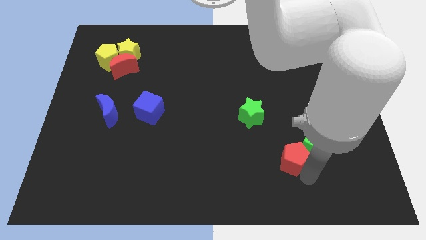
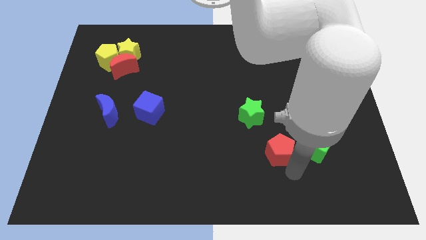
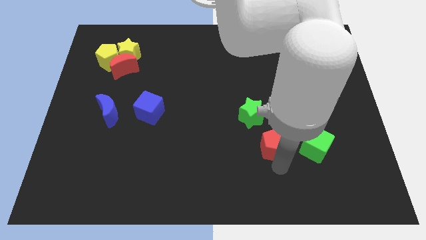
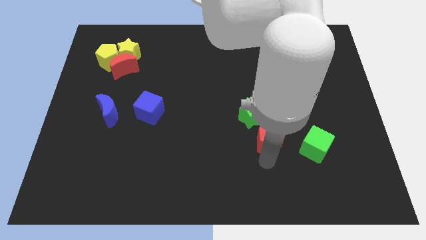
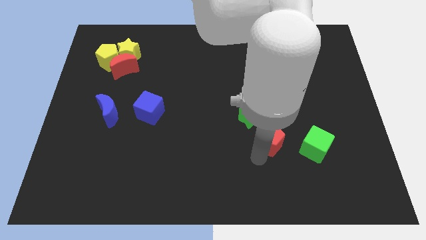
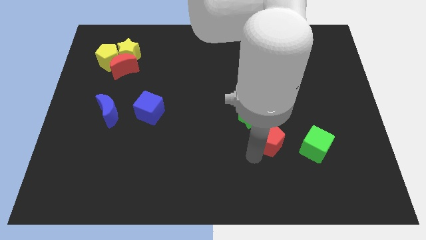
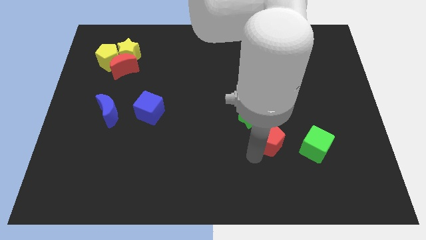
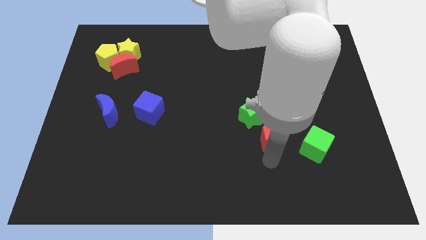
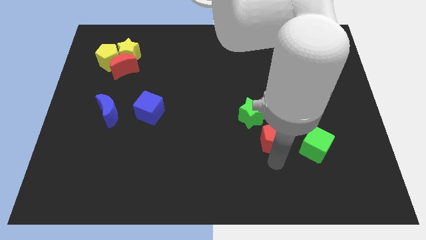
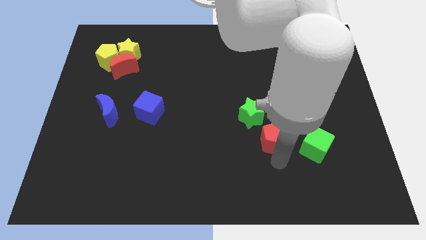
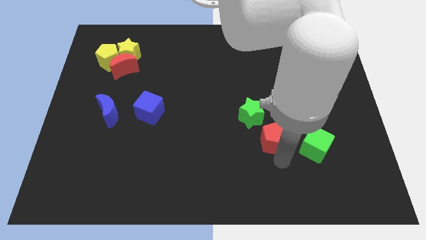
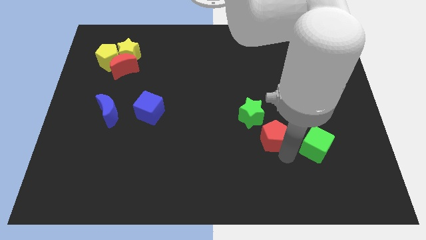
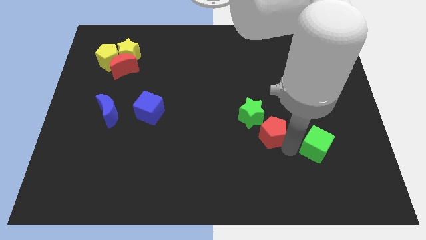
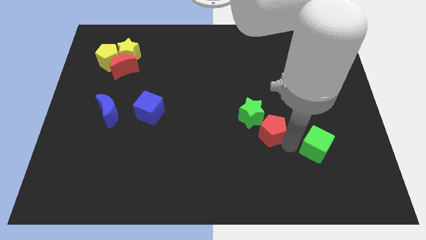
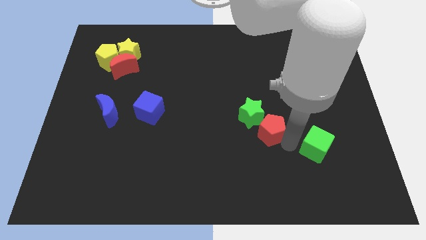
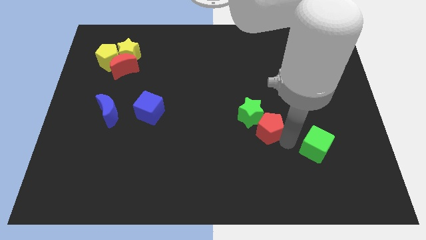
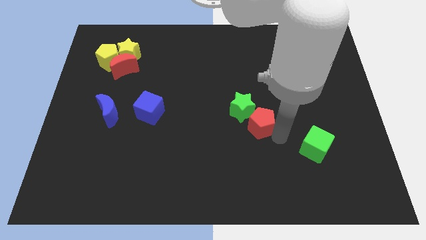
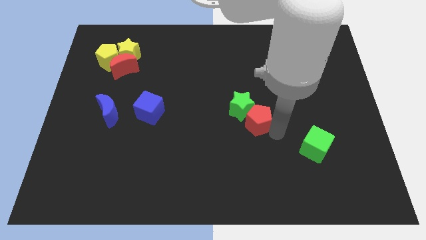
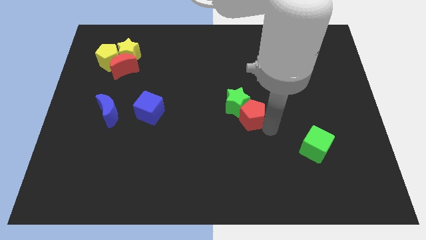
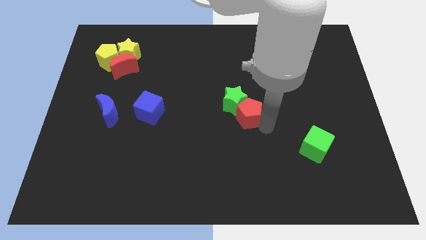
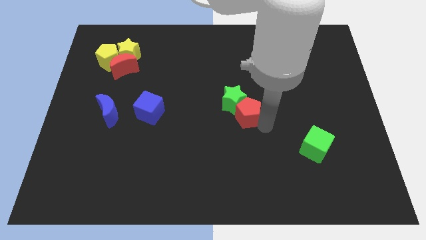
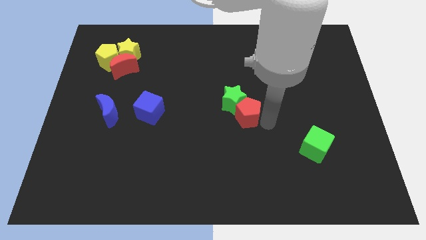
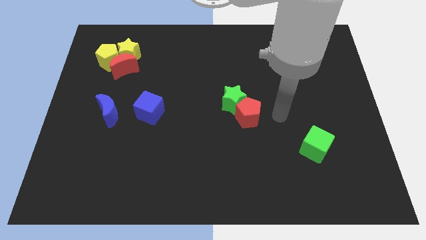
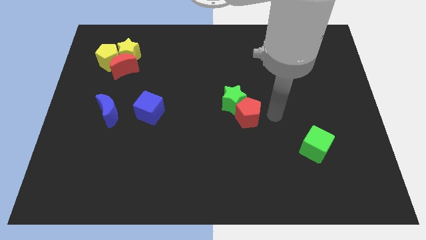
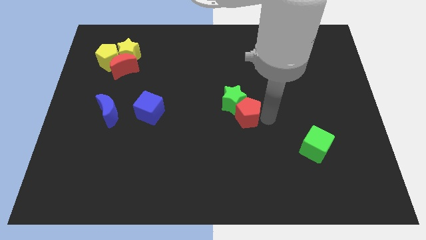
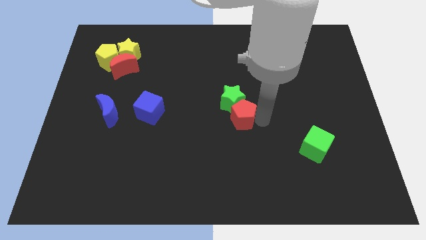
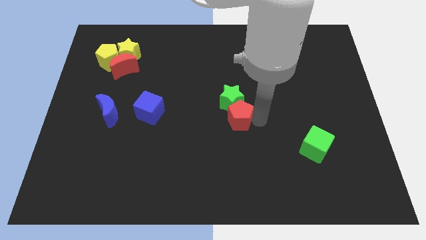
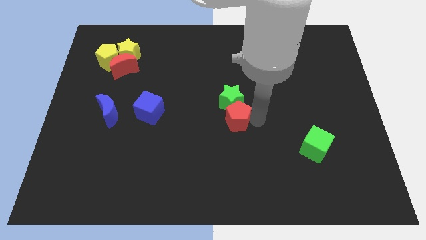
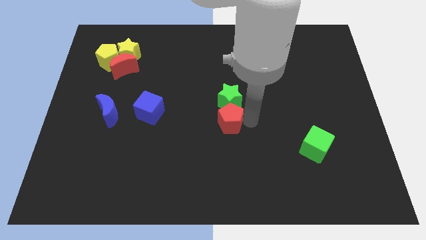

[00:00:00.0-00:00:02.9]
push red pentagon upwards

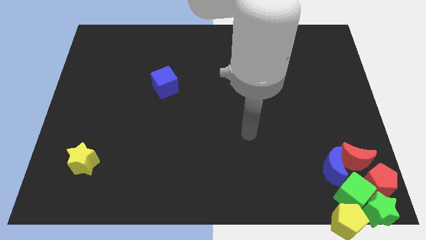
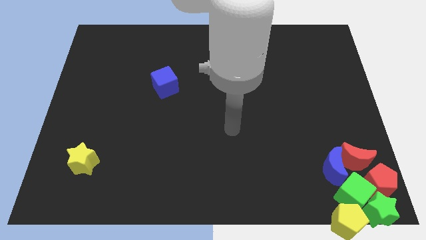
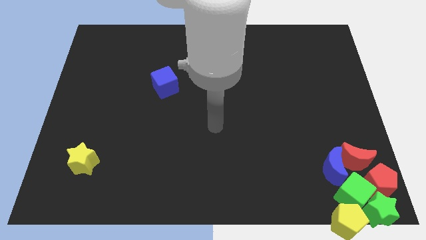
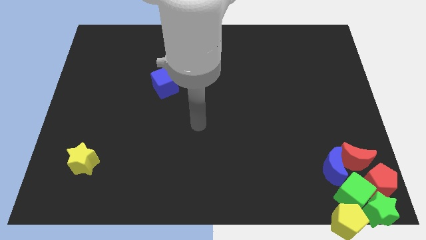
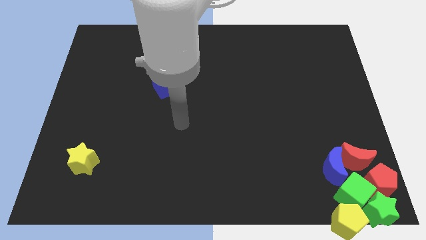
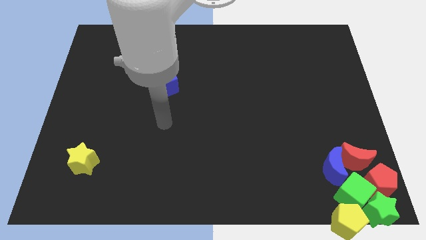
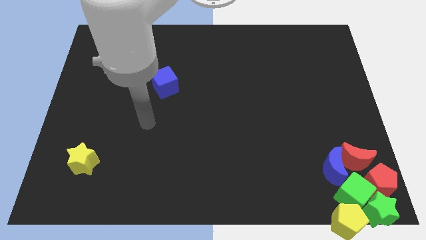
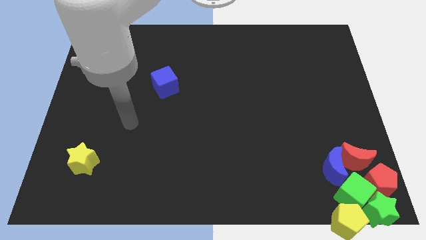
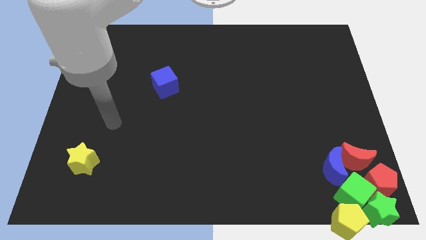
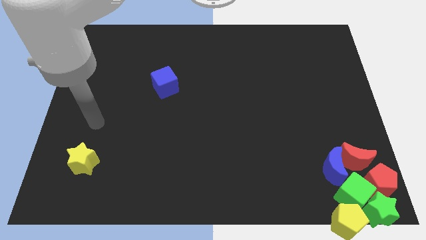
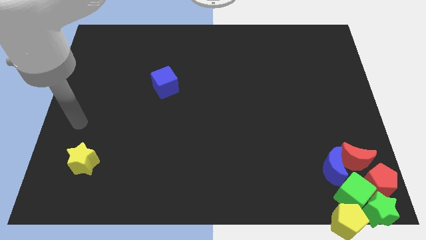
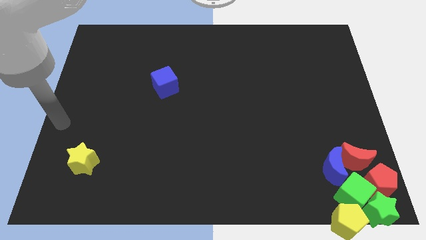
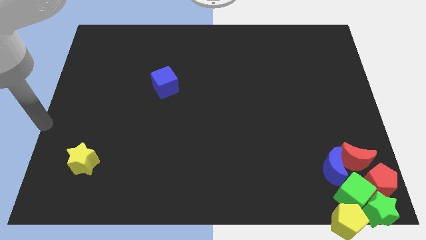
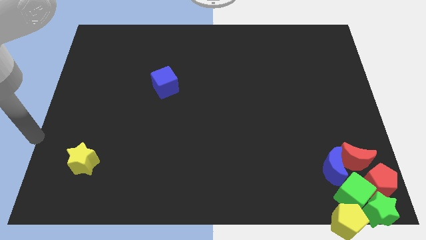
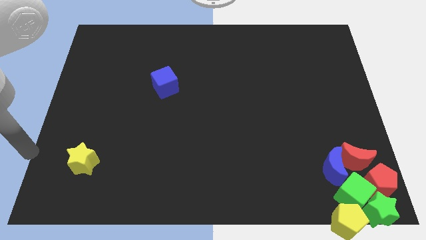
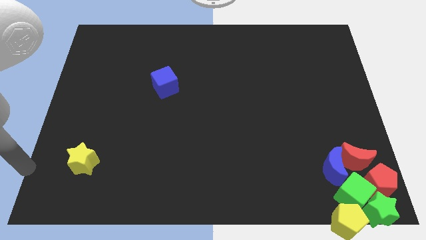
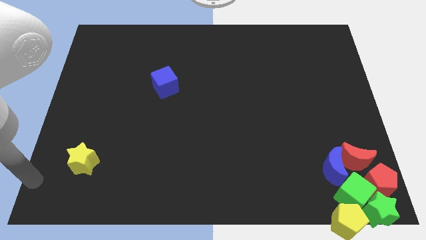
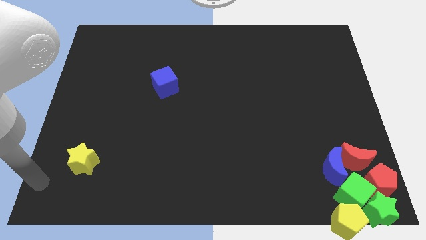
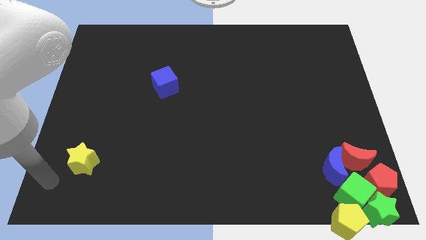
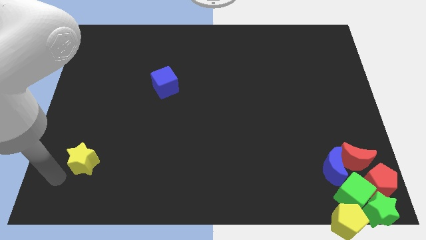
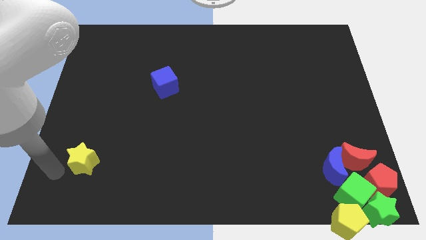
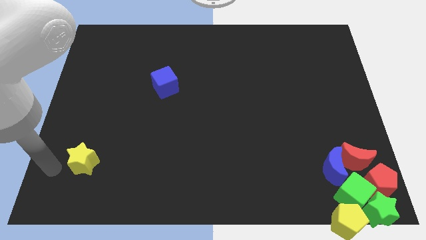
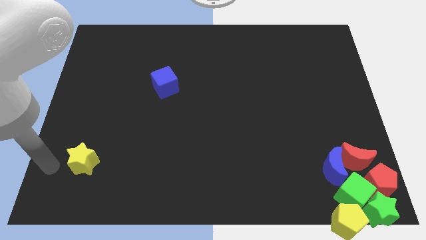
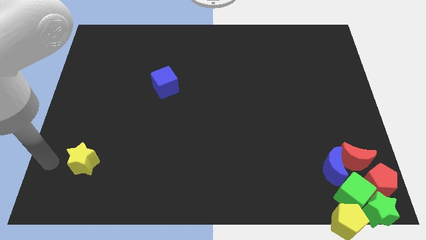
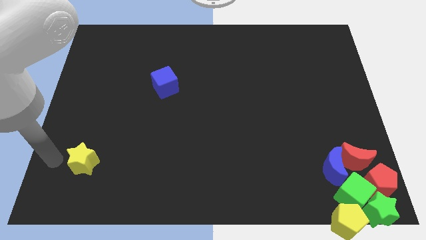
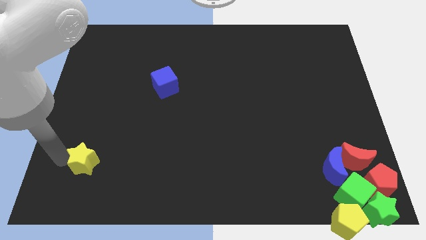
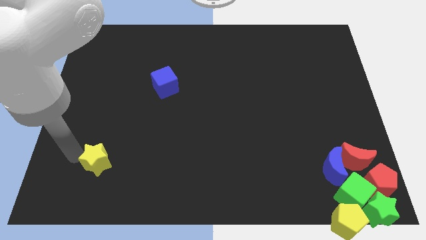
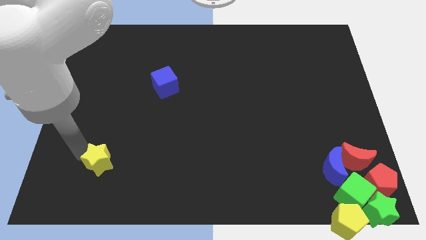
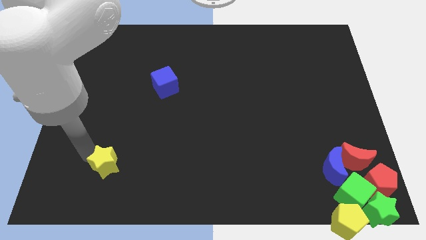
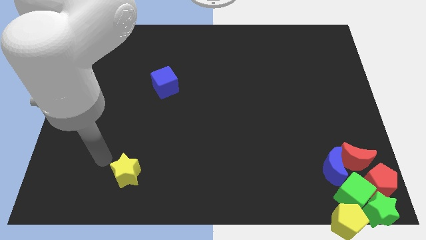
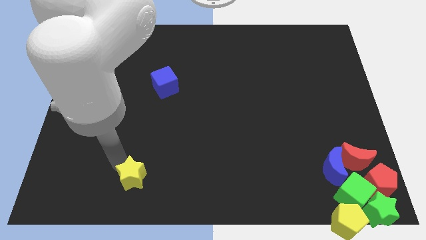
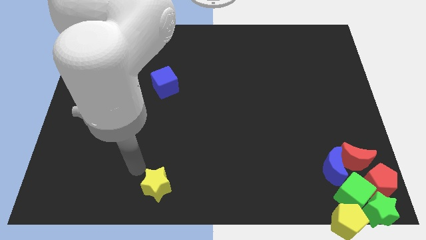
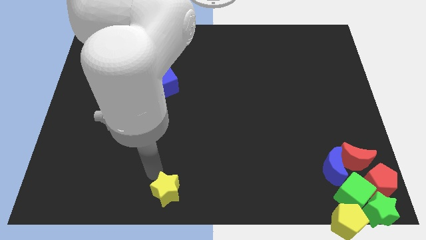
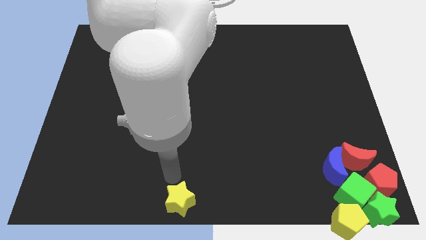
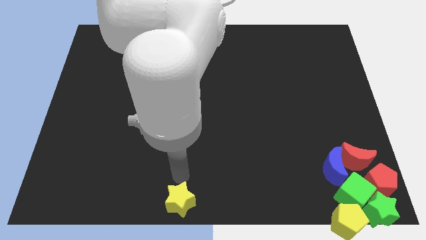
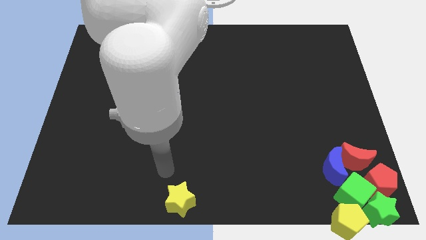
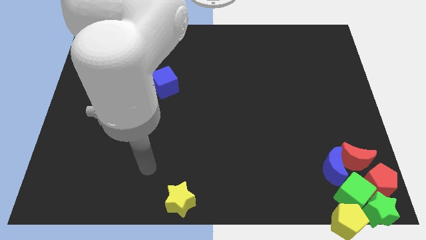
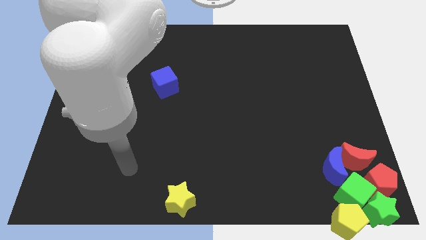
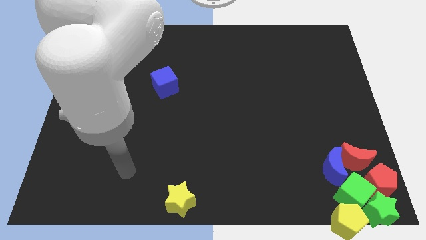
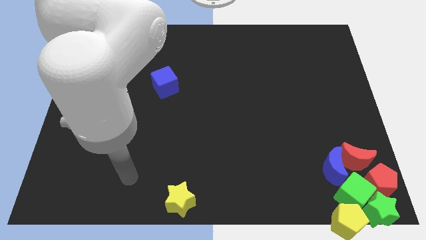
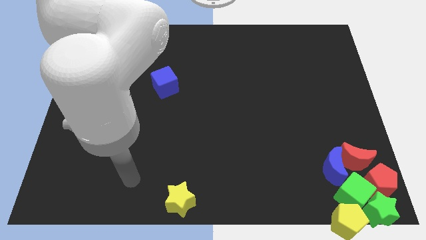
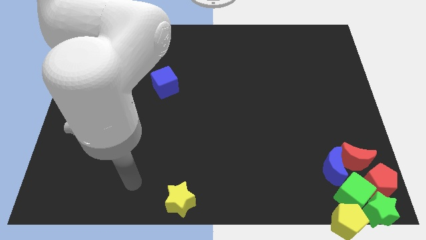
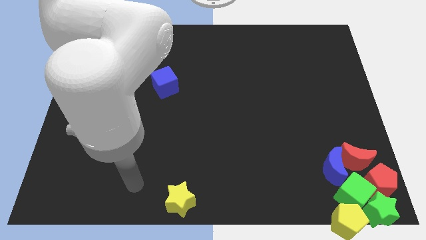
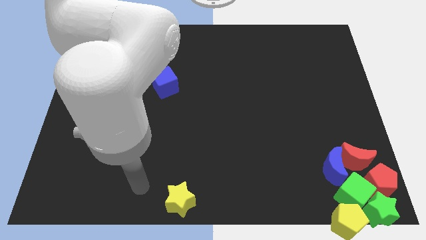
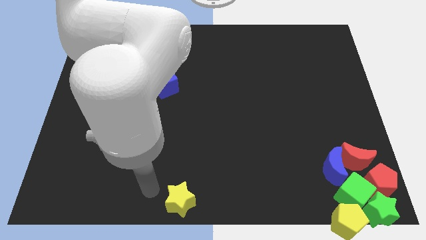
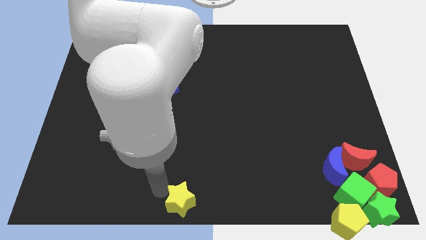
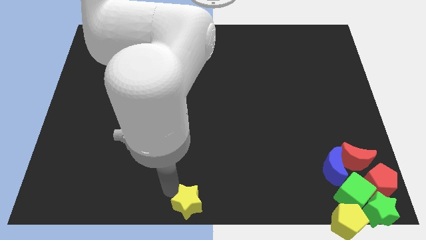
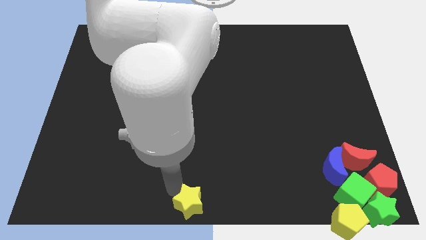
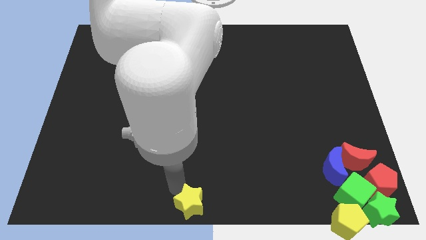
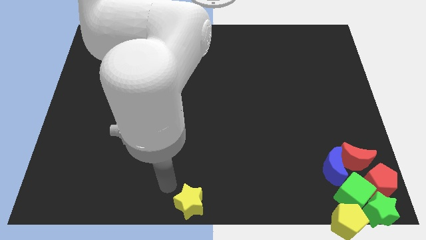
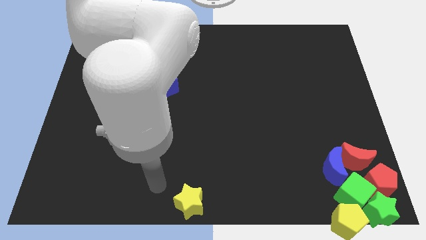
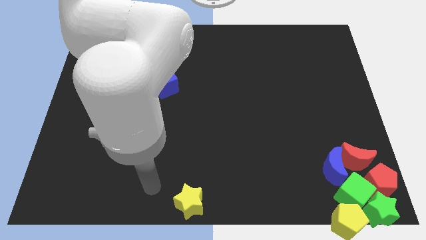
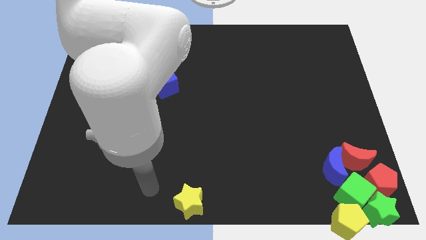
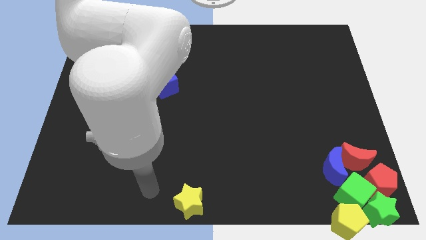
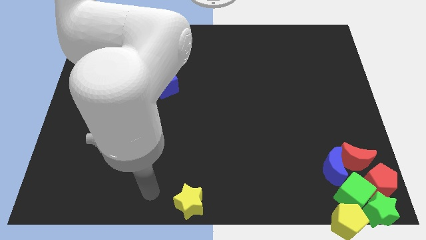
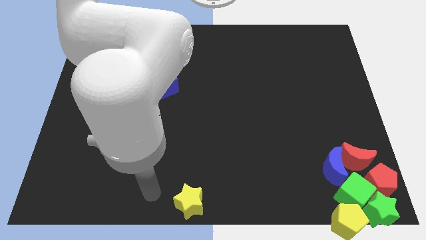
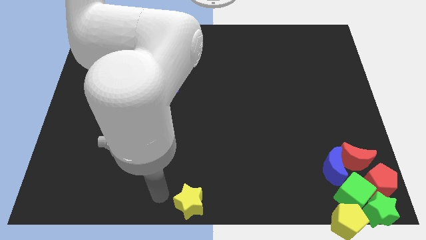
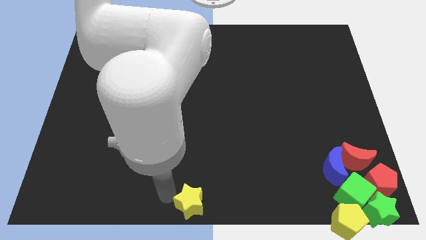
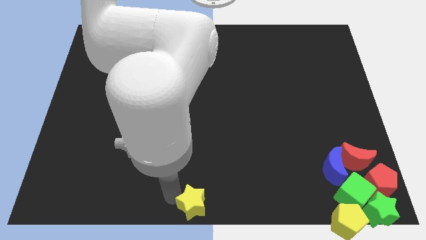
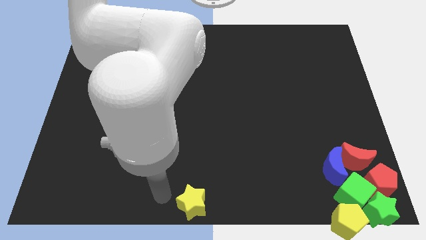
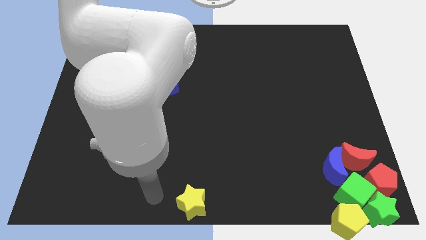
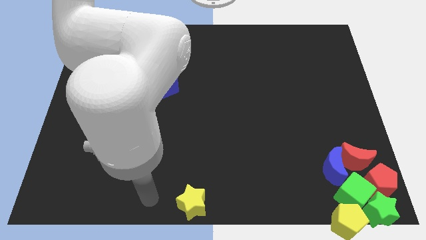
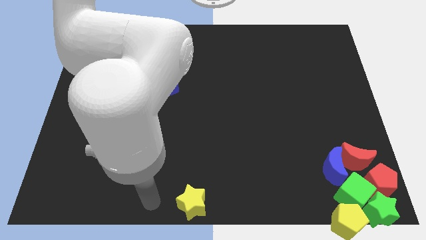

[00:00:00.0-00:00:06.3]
place the yellow star at the bottom center of the board
